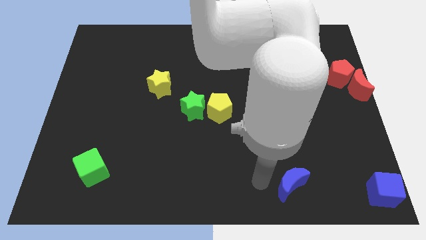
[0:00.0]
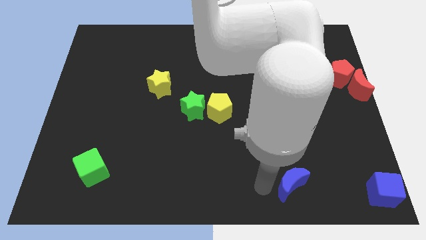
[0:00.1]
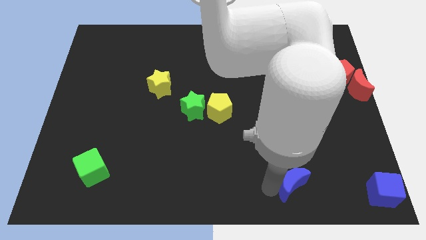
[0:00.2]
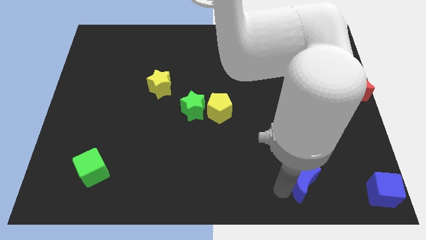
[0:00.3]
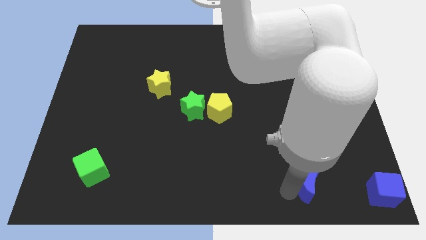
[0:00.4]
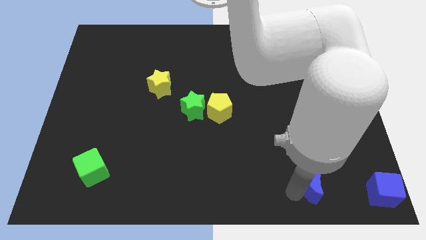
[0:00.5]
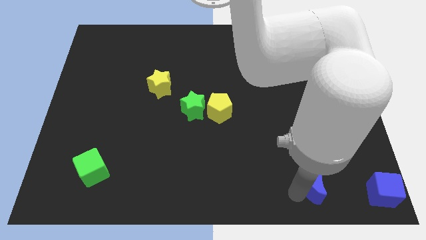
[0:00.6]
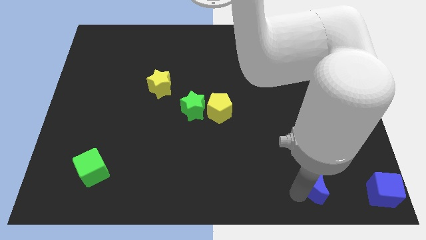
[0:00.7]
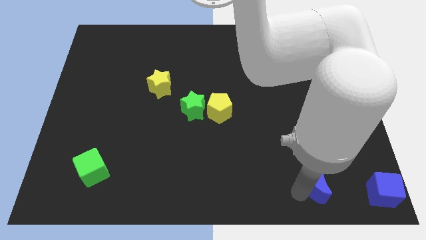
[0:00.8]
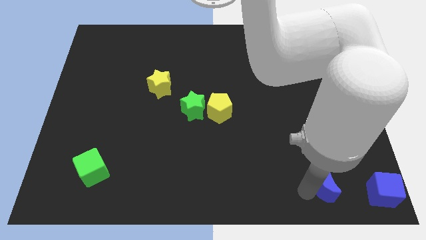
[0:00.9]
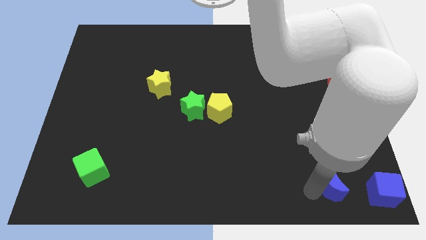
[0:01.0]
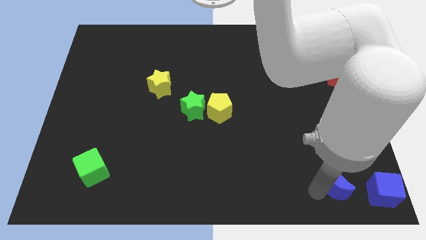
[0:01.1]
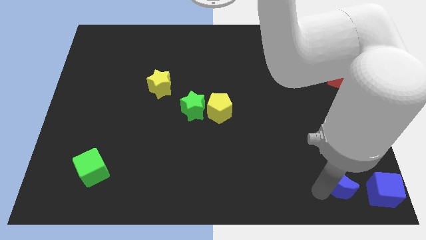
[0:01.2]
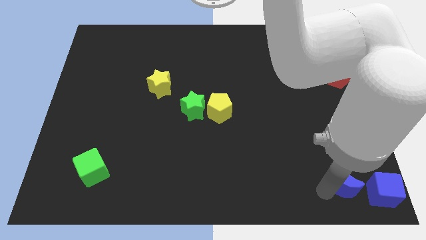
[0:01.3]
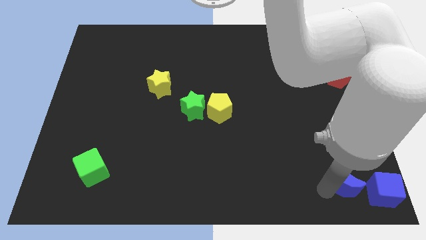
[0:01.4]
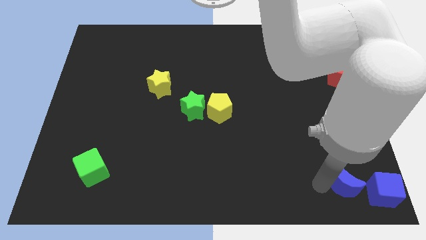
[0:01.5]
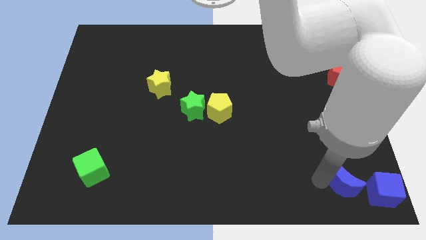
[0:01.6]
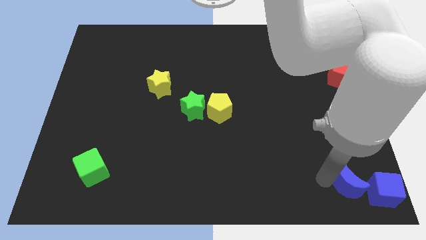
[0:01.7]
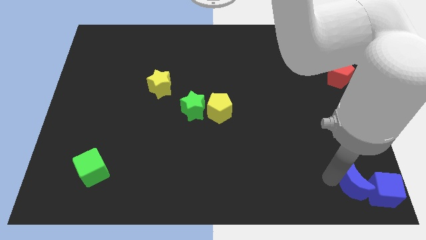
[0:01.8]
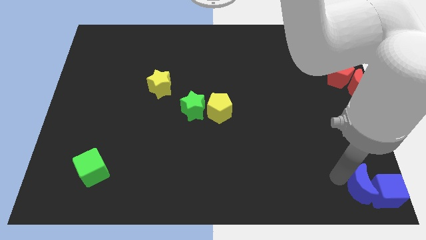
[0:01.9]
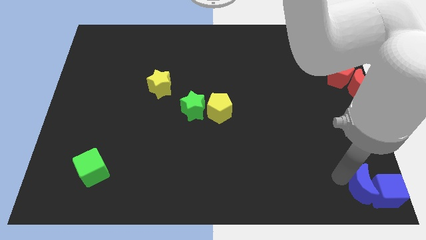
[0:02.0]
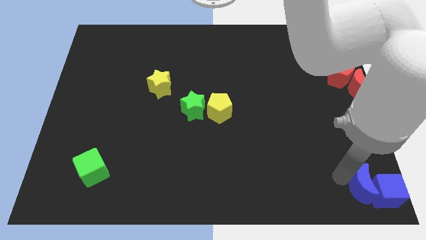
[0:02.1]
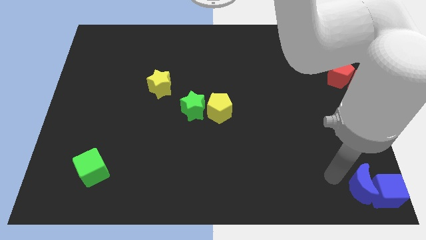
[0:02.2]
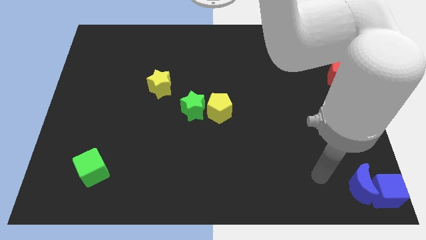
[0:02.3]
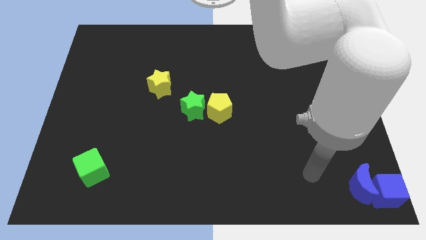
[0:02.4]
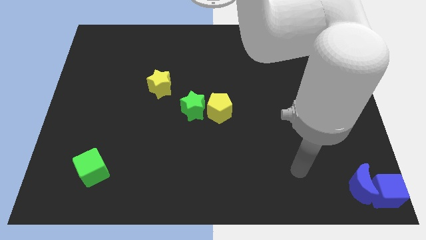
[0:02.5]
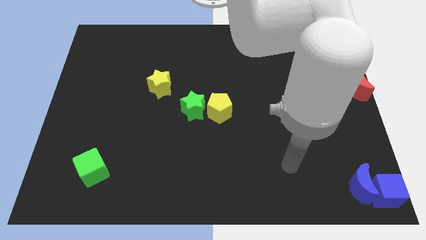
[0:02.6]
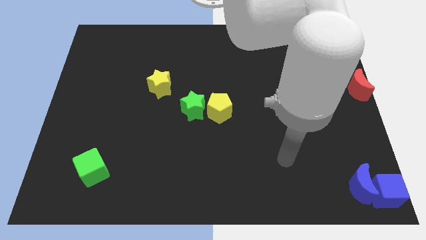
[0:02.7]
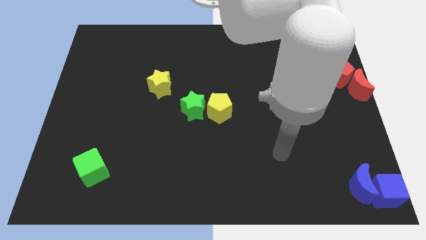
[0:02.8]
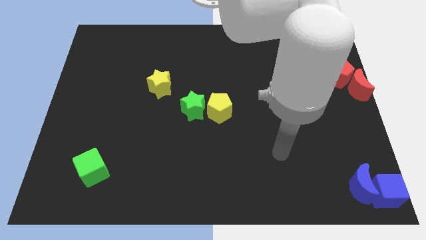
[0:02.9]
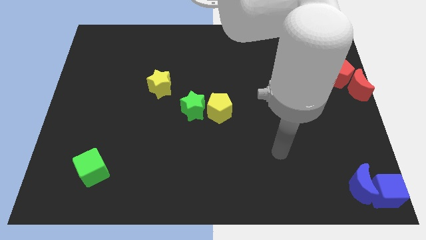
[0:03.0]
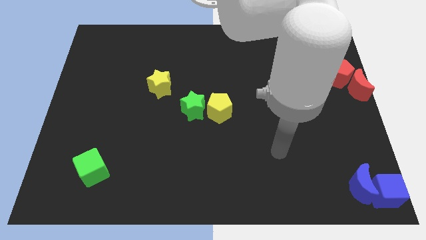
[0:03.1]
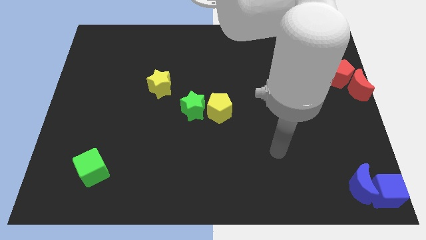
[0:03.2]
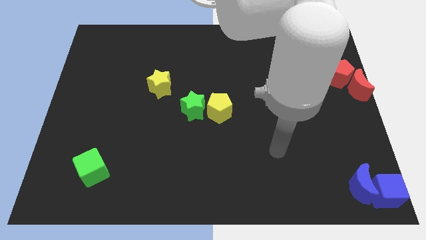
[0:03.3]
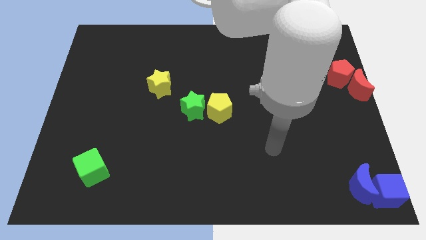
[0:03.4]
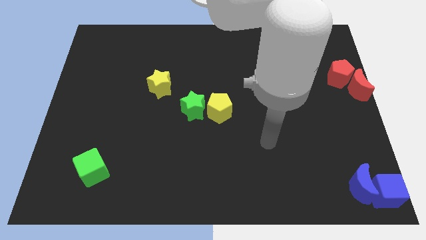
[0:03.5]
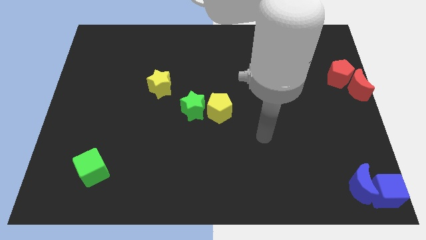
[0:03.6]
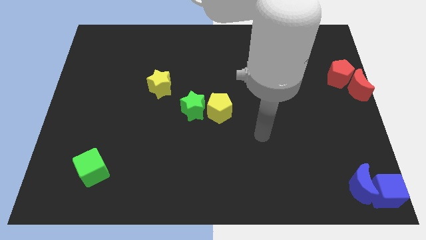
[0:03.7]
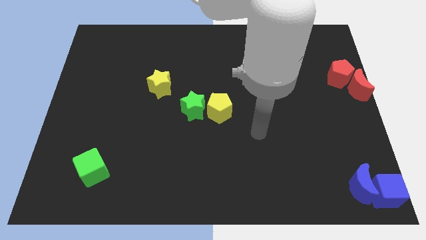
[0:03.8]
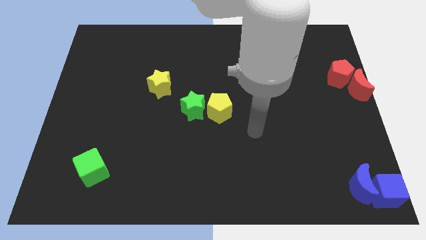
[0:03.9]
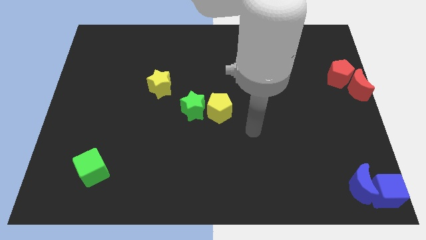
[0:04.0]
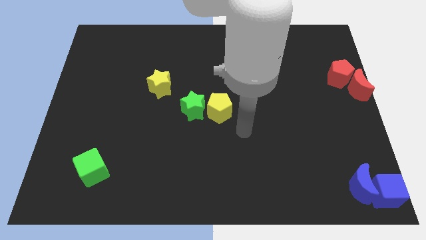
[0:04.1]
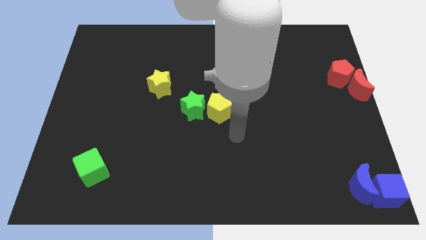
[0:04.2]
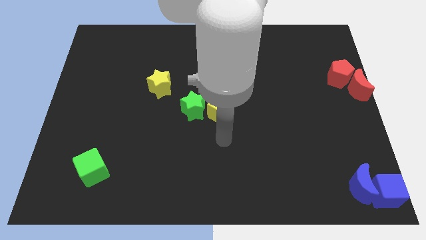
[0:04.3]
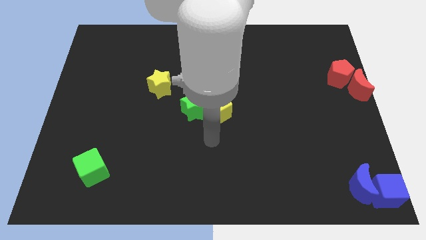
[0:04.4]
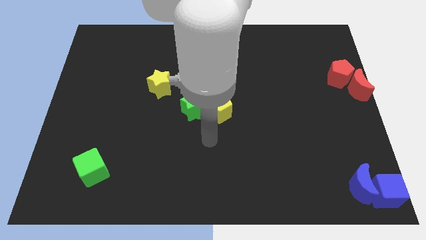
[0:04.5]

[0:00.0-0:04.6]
push blue moon into blue cube

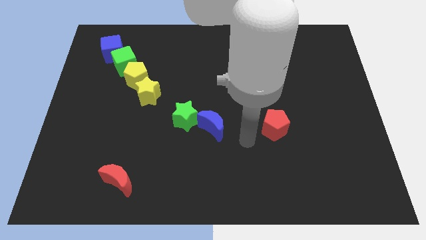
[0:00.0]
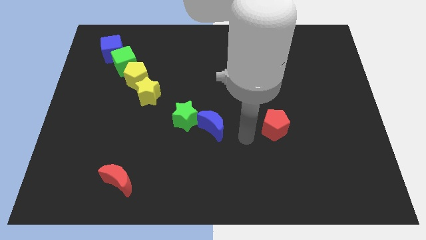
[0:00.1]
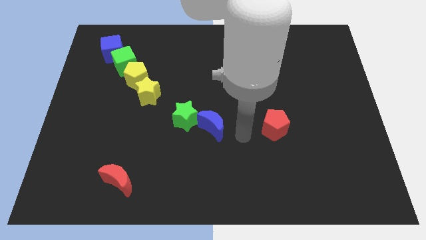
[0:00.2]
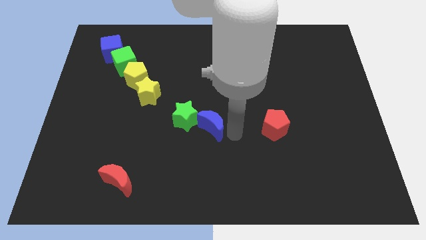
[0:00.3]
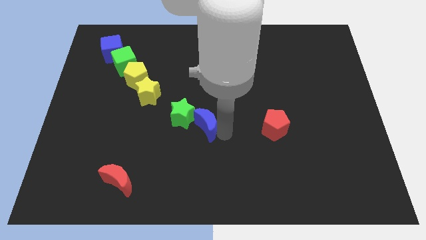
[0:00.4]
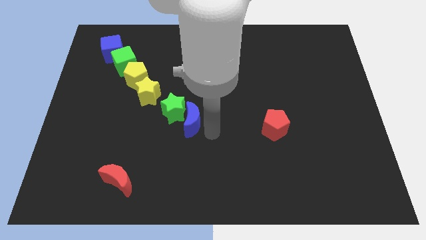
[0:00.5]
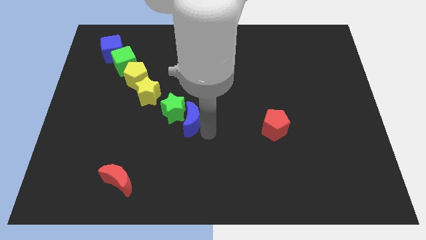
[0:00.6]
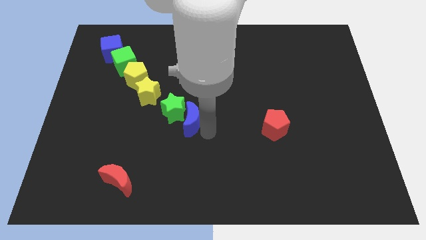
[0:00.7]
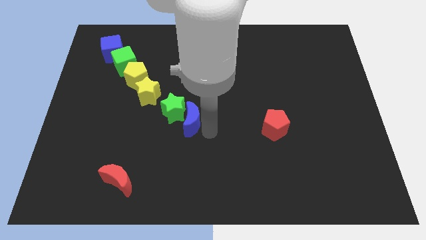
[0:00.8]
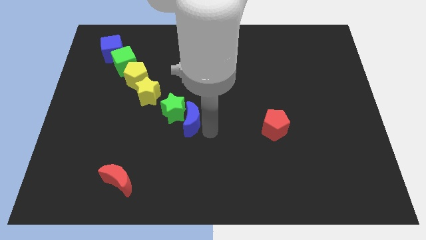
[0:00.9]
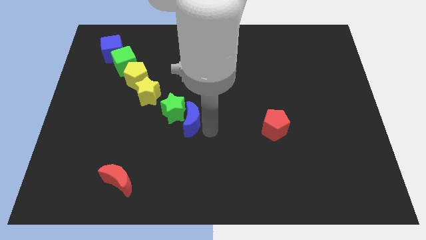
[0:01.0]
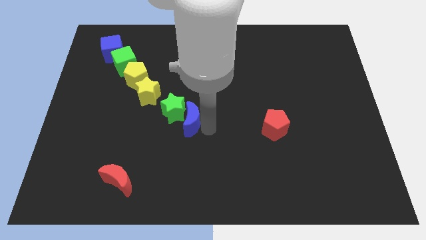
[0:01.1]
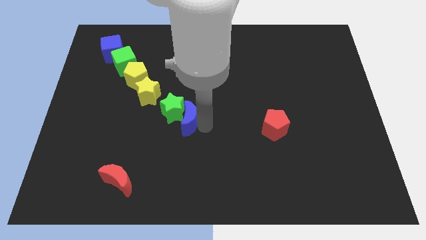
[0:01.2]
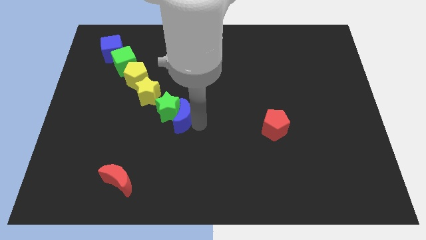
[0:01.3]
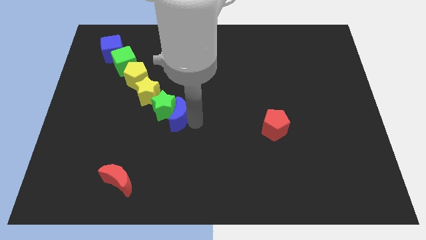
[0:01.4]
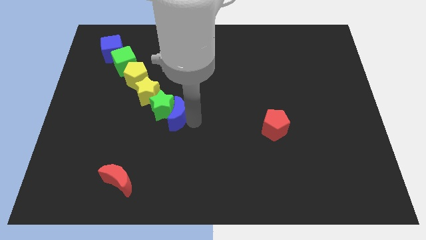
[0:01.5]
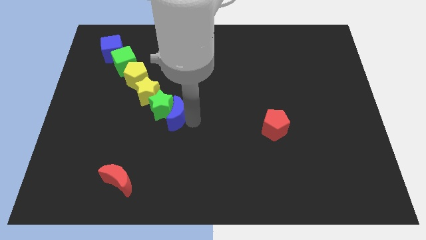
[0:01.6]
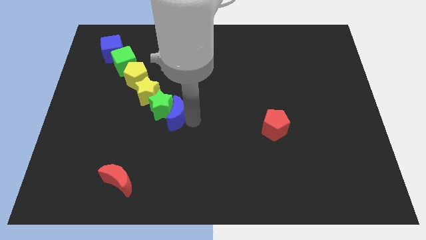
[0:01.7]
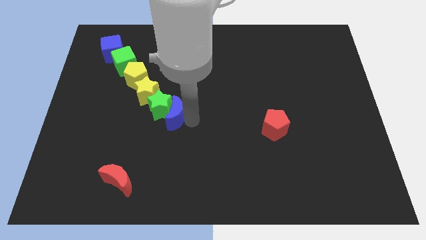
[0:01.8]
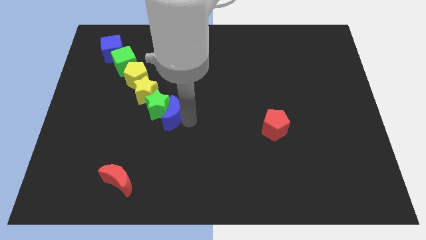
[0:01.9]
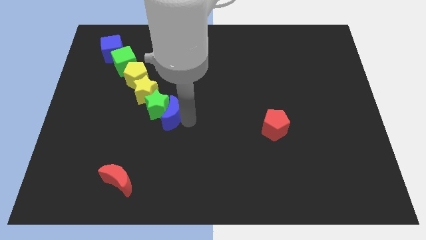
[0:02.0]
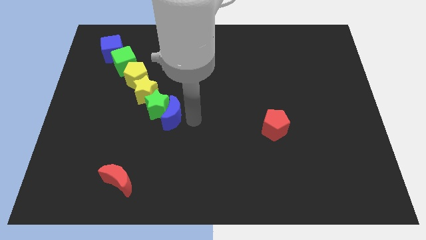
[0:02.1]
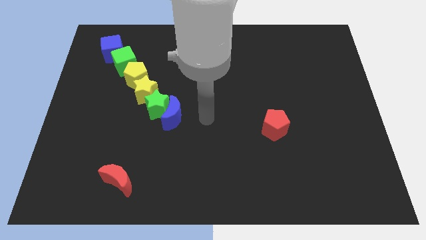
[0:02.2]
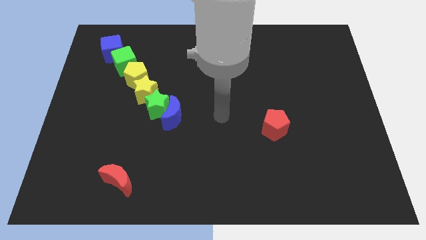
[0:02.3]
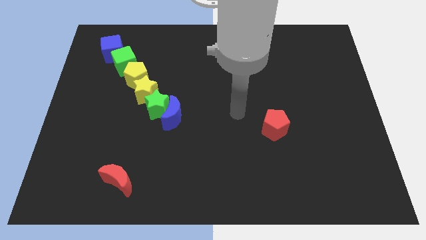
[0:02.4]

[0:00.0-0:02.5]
push the blue moon and green star diagonal to yellow star

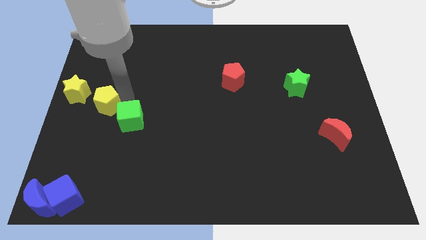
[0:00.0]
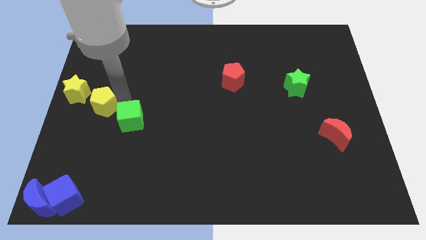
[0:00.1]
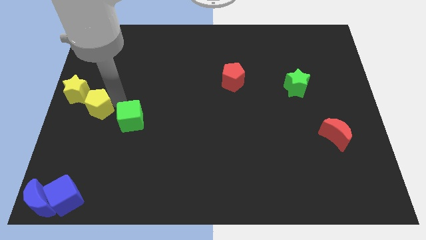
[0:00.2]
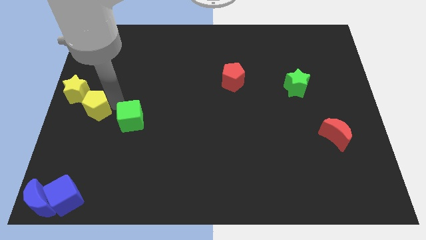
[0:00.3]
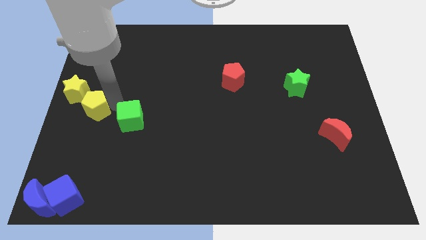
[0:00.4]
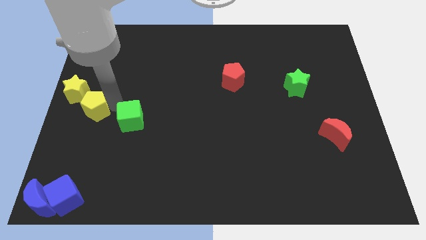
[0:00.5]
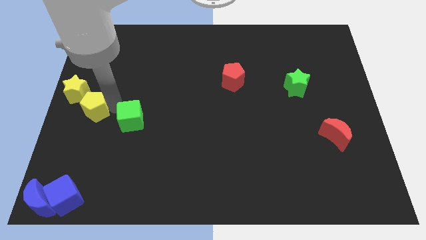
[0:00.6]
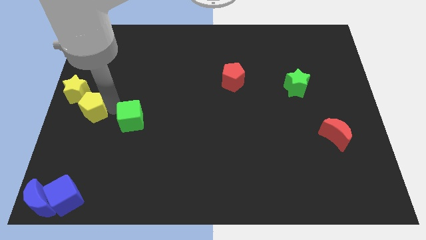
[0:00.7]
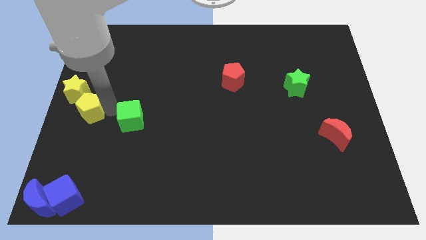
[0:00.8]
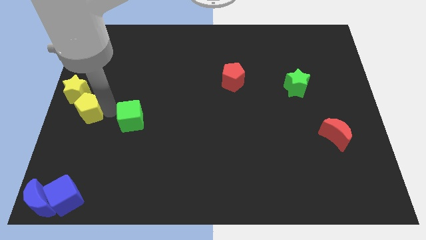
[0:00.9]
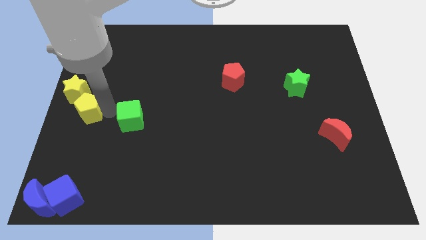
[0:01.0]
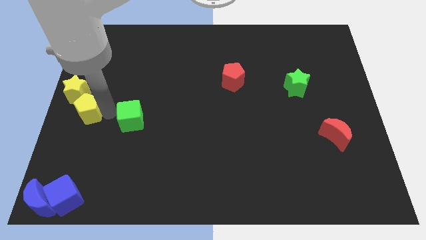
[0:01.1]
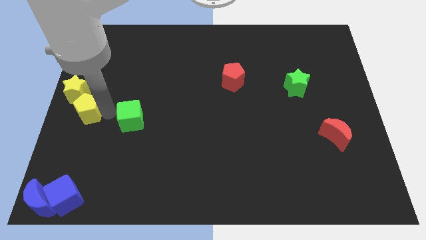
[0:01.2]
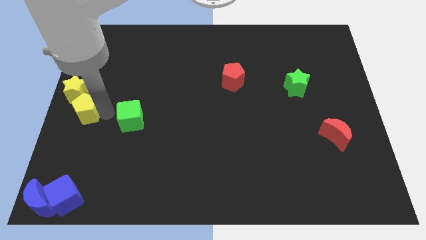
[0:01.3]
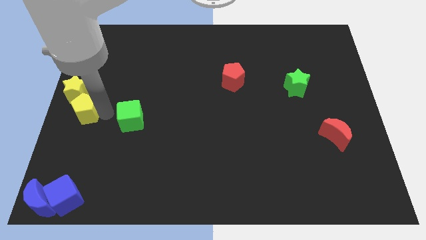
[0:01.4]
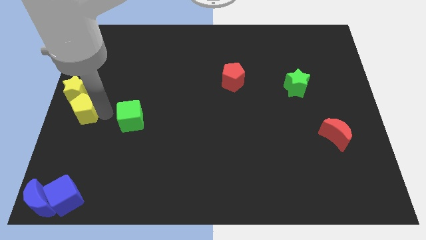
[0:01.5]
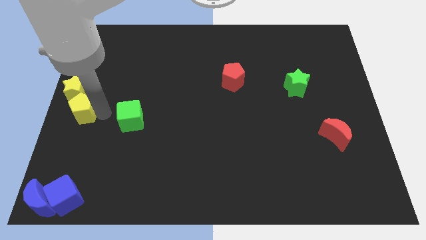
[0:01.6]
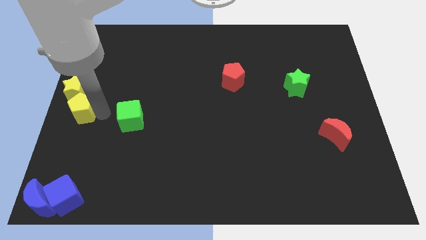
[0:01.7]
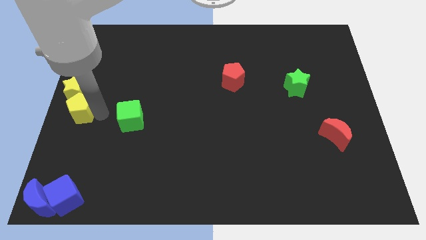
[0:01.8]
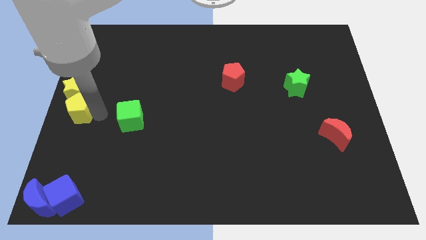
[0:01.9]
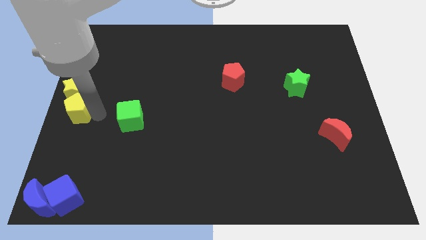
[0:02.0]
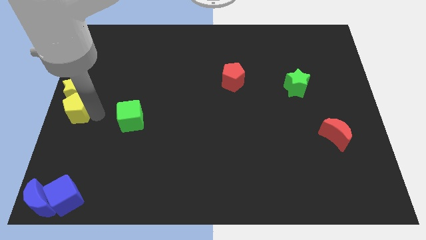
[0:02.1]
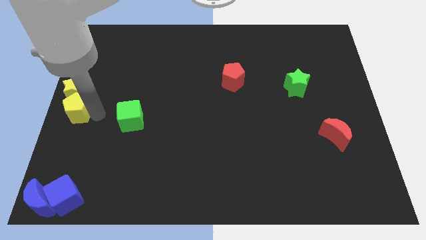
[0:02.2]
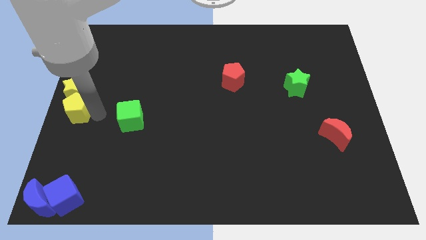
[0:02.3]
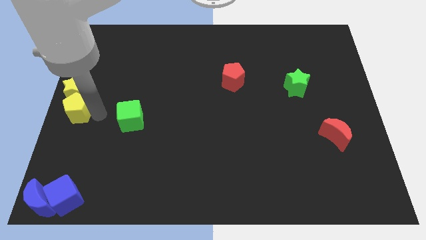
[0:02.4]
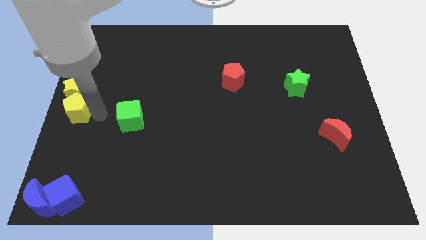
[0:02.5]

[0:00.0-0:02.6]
place yellow pentagon at the bottom of the yellow star
